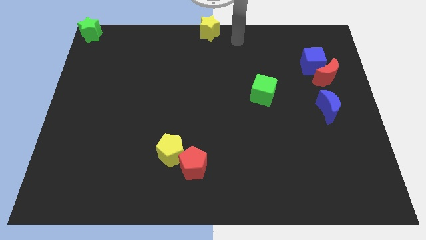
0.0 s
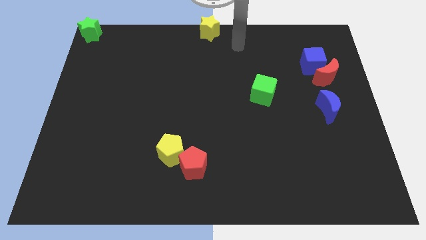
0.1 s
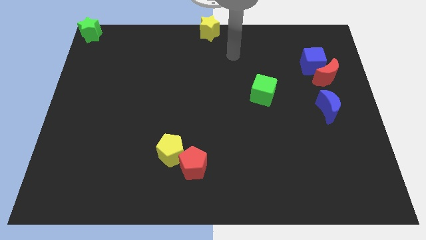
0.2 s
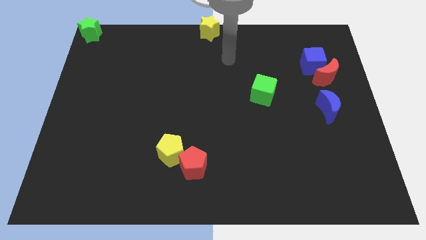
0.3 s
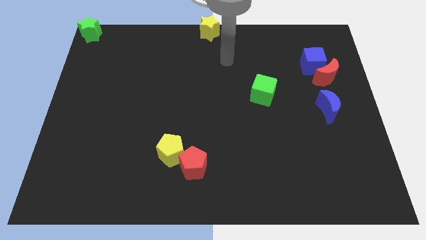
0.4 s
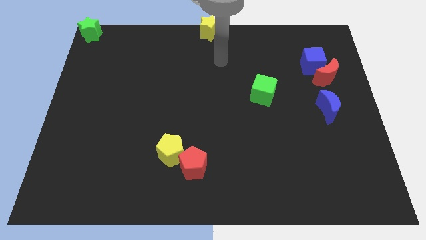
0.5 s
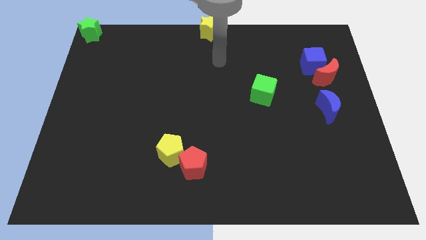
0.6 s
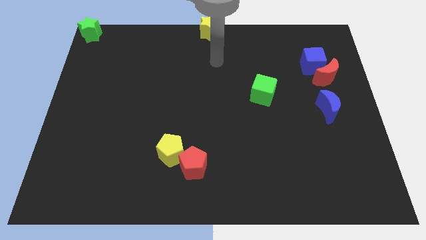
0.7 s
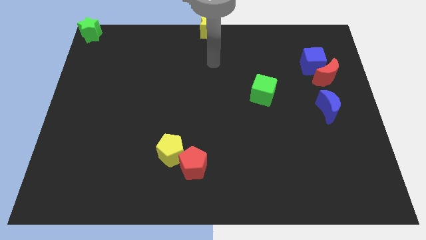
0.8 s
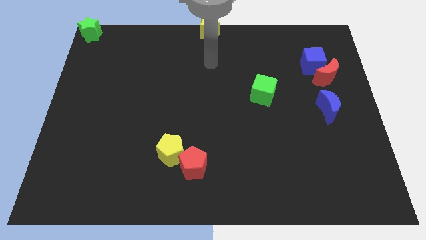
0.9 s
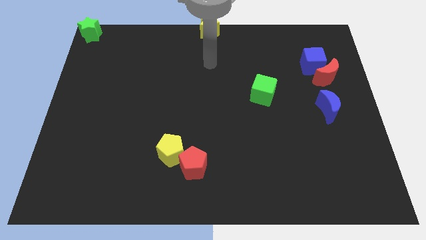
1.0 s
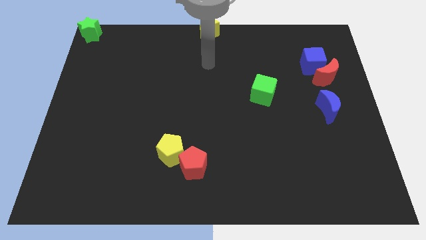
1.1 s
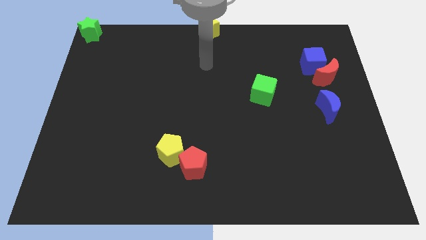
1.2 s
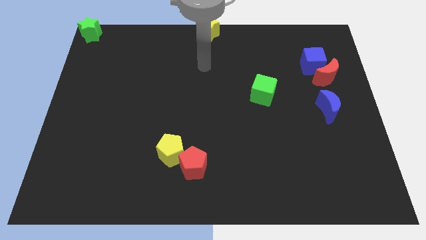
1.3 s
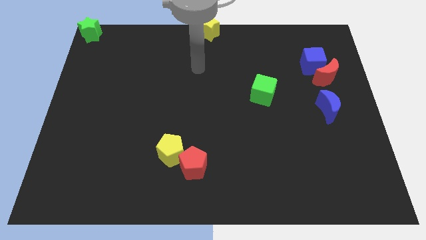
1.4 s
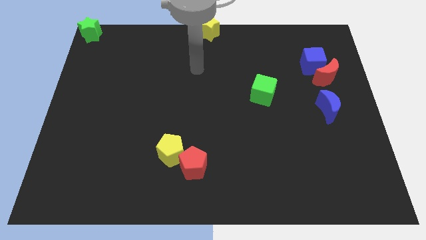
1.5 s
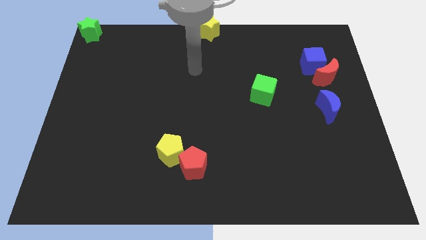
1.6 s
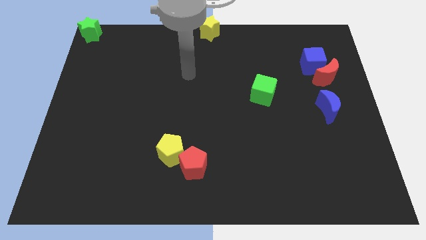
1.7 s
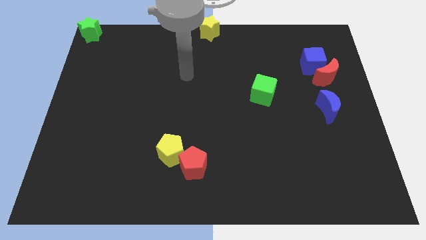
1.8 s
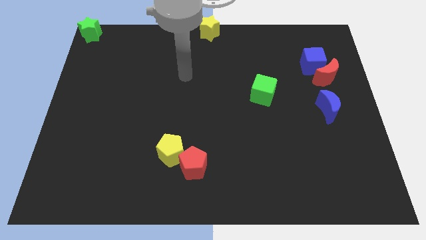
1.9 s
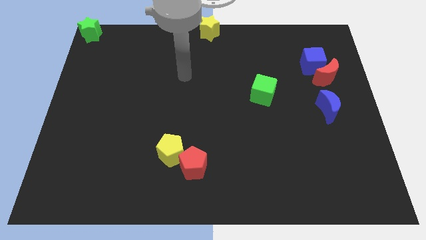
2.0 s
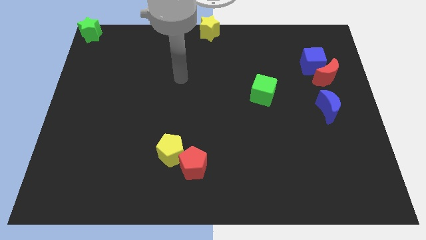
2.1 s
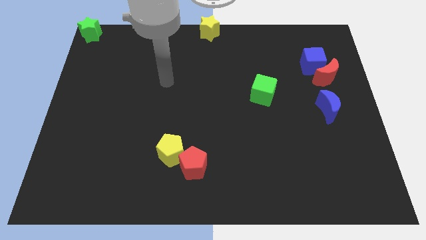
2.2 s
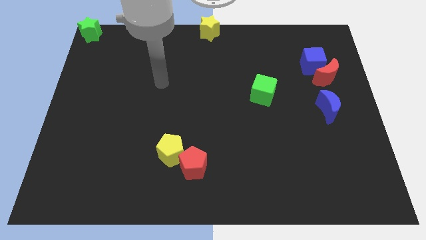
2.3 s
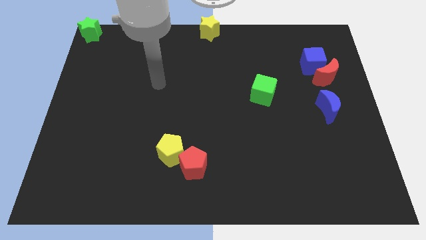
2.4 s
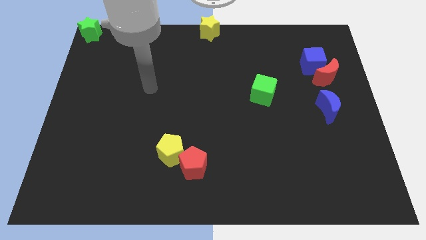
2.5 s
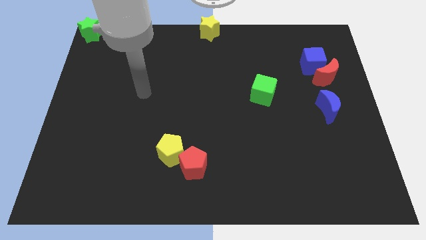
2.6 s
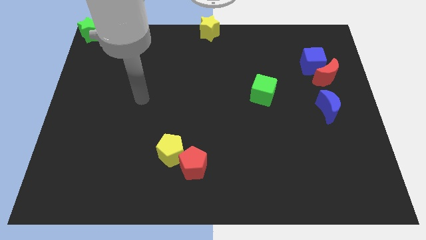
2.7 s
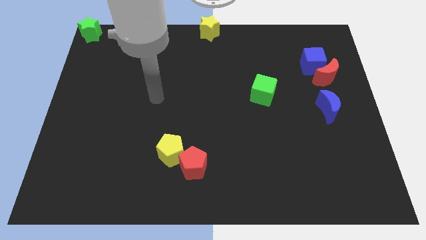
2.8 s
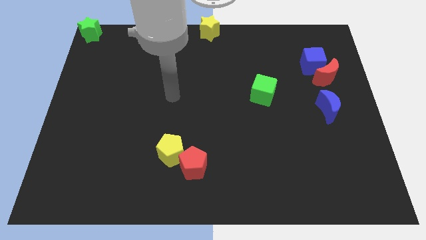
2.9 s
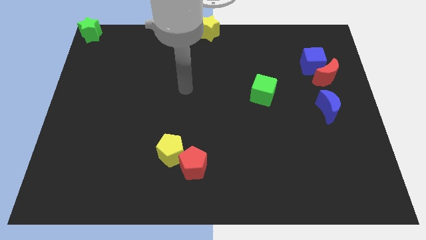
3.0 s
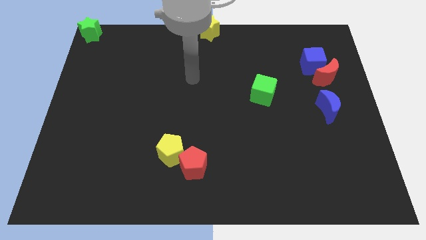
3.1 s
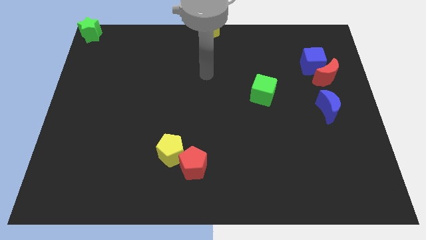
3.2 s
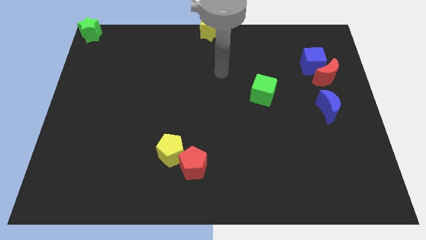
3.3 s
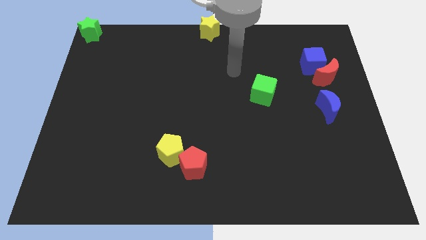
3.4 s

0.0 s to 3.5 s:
move your arm towards green cube

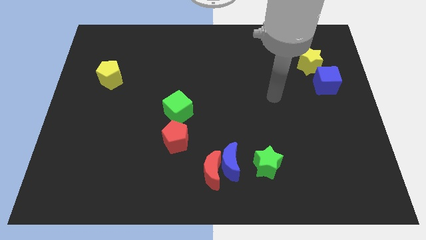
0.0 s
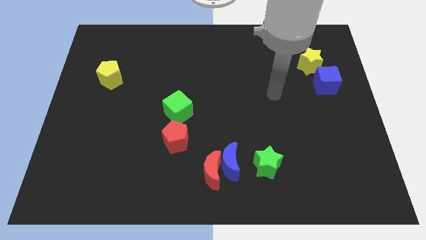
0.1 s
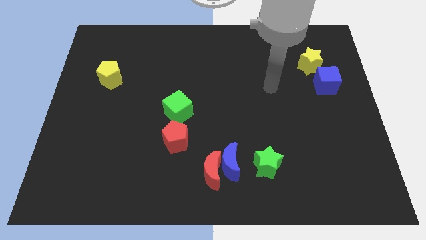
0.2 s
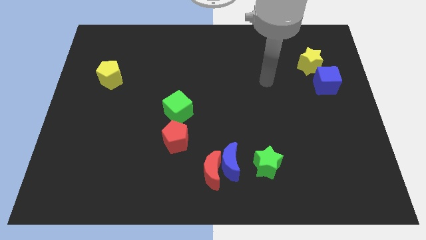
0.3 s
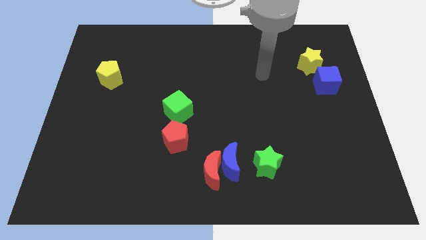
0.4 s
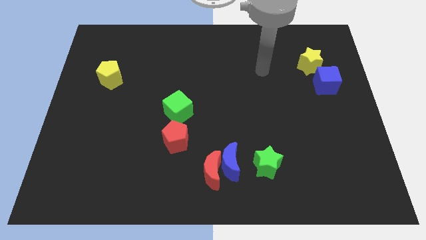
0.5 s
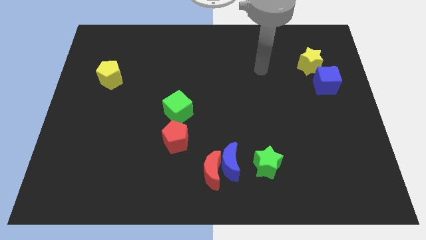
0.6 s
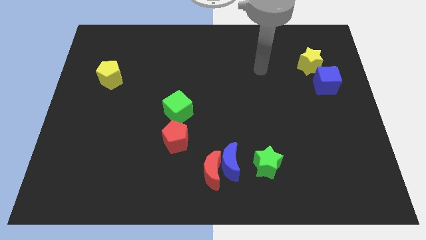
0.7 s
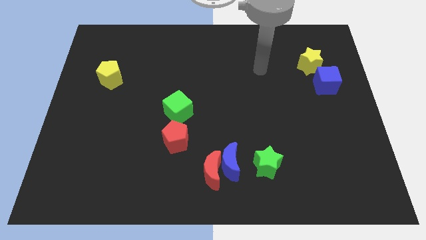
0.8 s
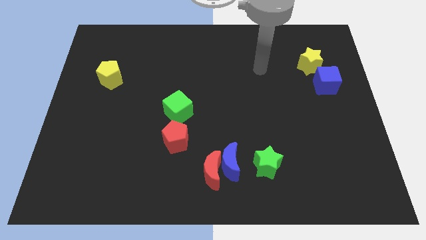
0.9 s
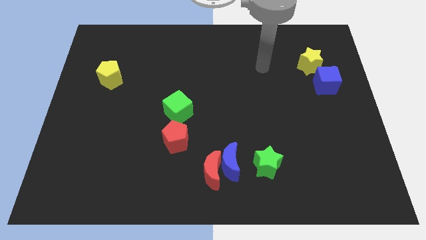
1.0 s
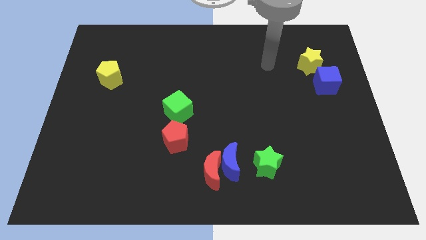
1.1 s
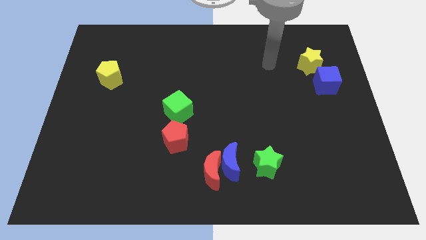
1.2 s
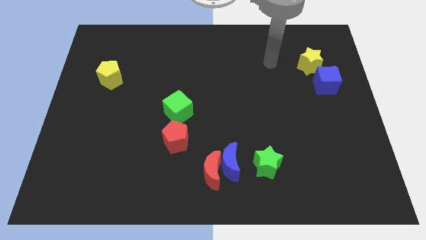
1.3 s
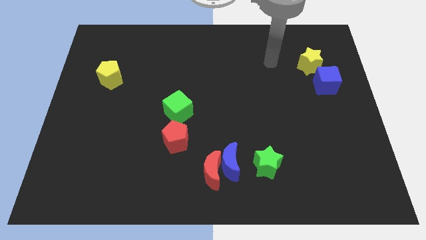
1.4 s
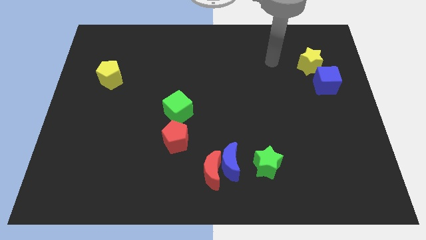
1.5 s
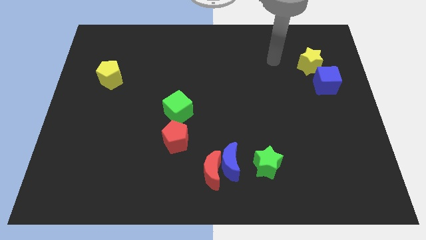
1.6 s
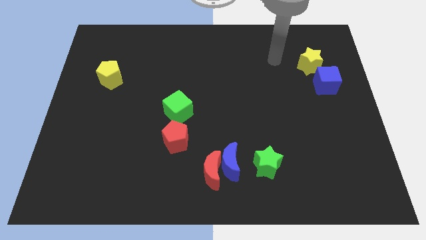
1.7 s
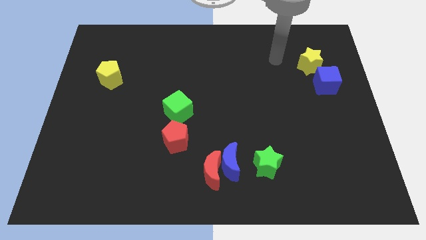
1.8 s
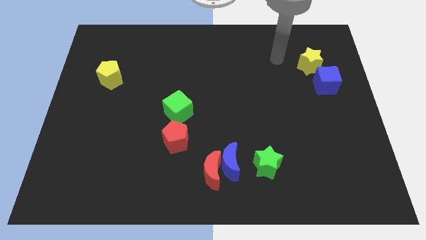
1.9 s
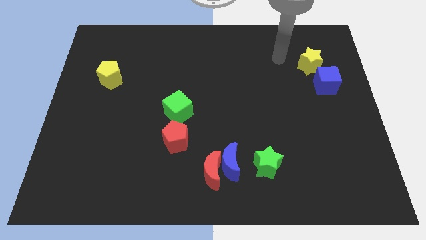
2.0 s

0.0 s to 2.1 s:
move the arm to the left of the yellow star

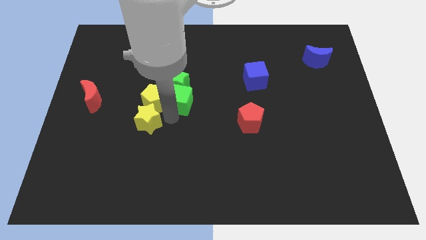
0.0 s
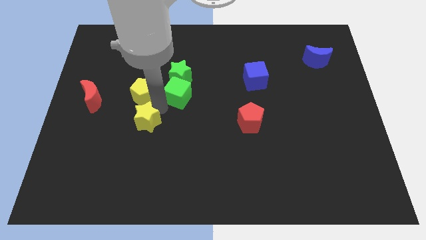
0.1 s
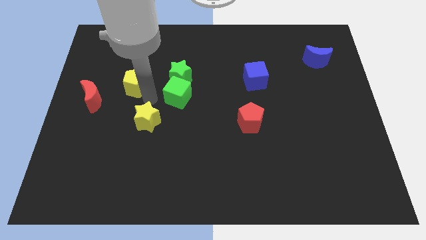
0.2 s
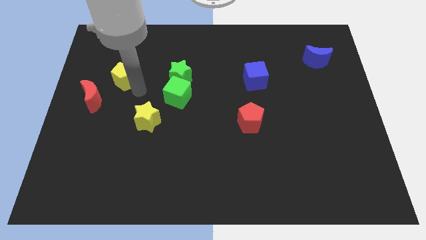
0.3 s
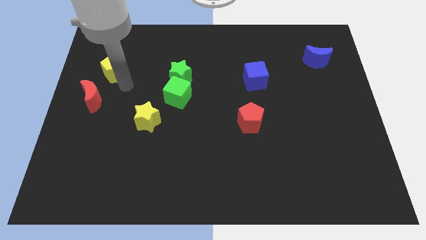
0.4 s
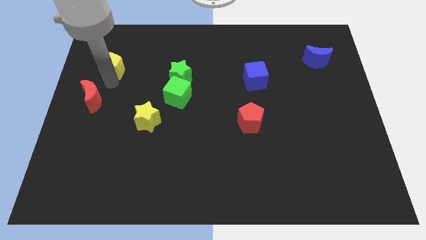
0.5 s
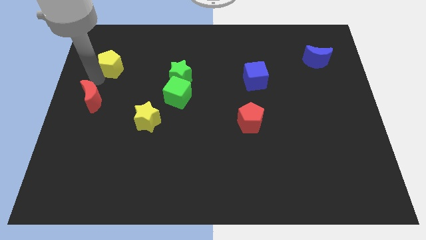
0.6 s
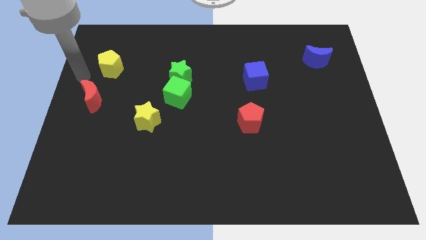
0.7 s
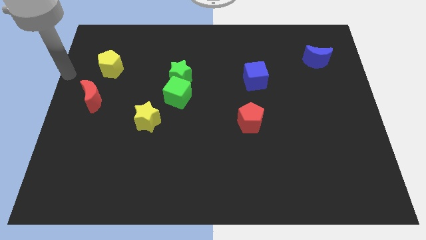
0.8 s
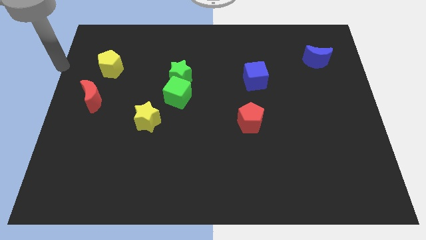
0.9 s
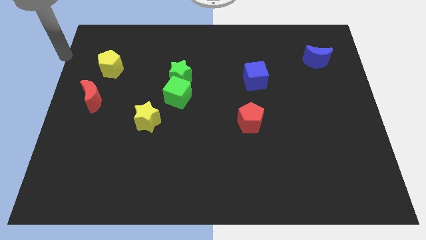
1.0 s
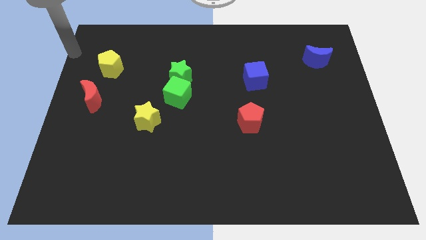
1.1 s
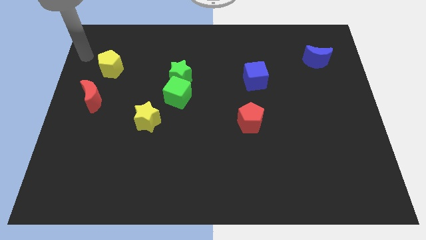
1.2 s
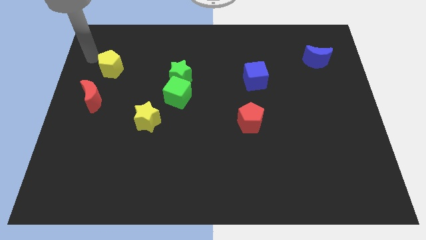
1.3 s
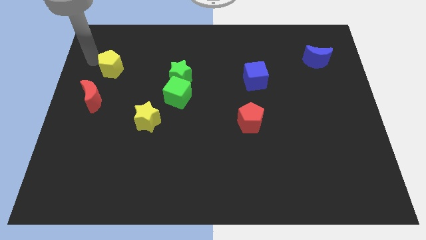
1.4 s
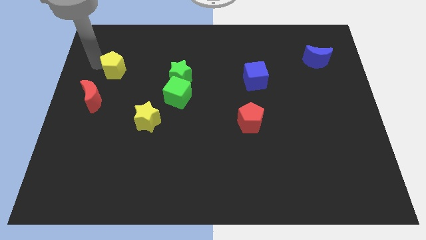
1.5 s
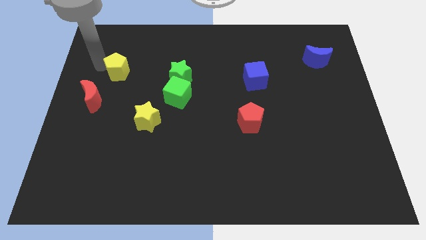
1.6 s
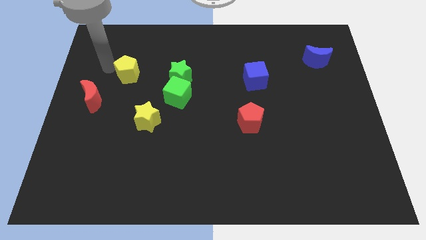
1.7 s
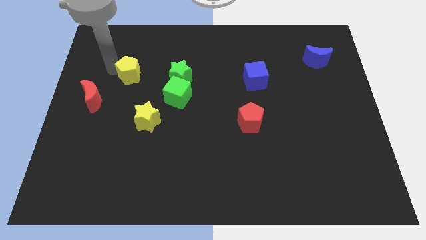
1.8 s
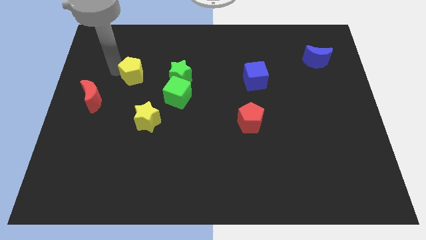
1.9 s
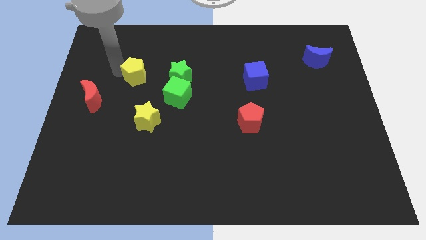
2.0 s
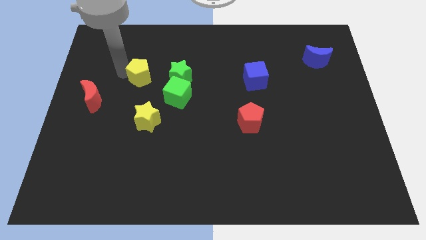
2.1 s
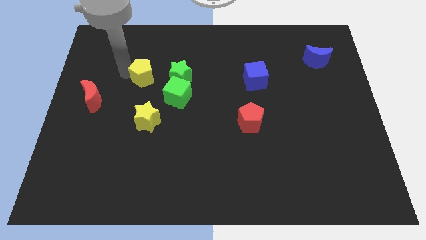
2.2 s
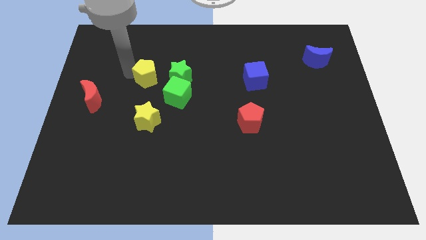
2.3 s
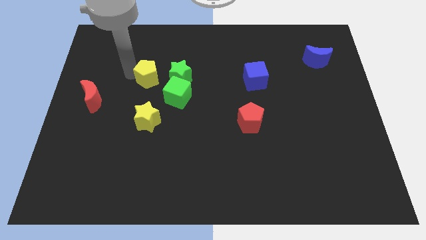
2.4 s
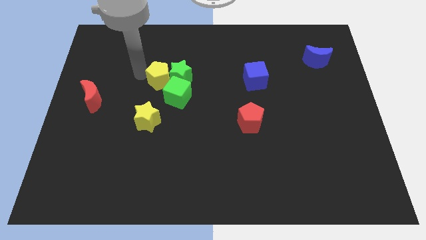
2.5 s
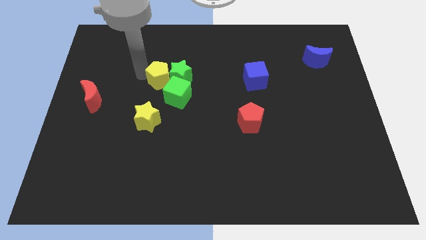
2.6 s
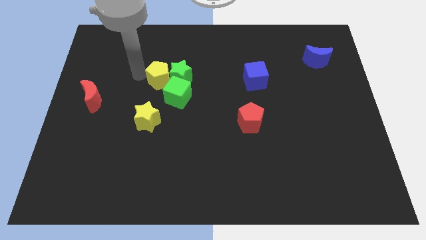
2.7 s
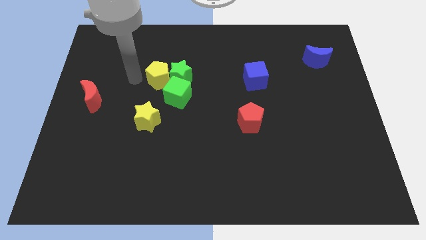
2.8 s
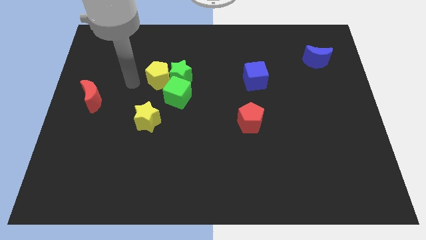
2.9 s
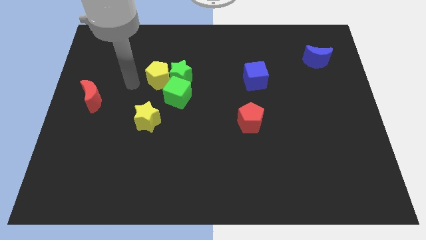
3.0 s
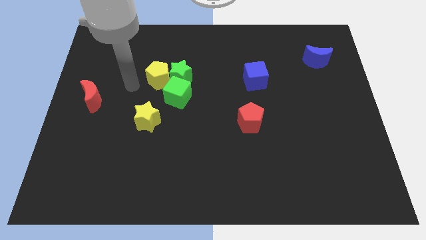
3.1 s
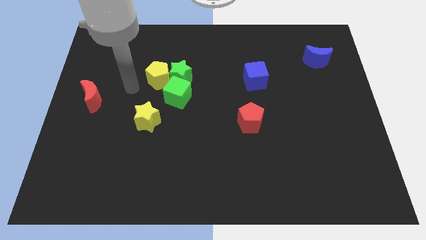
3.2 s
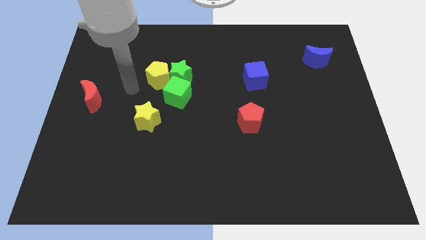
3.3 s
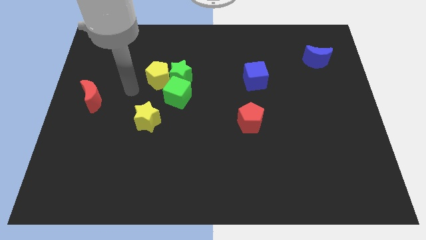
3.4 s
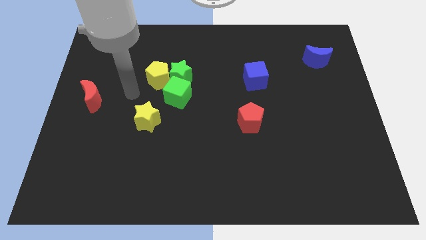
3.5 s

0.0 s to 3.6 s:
push the yellow pentagon to the left of the green star
